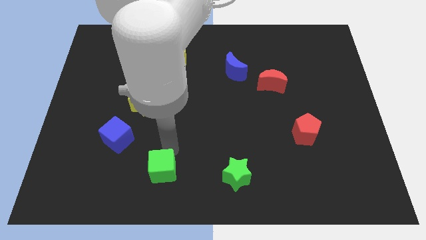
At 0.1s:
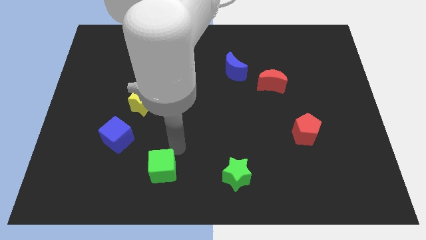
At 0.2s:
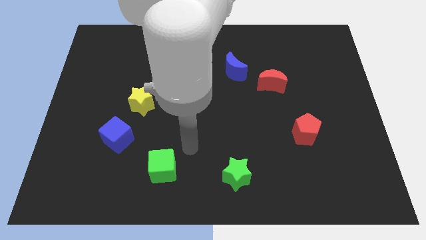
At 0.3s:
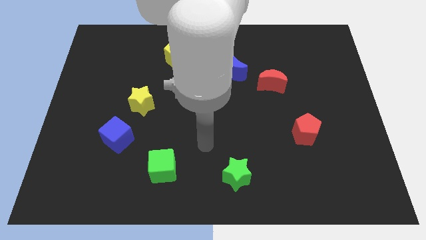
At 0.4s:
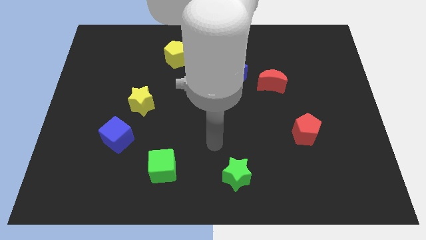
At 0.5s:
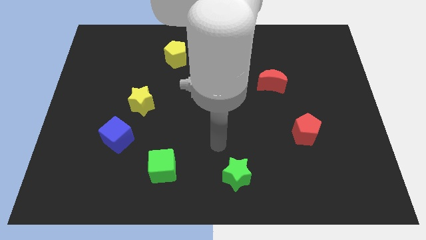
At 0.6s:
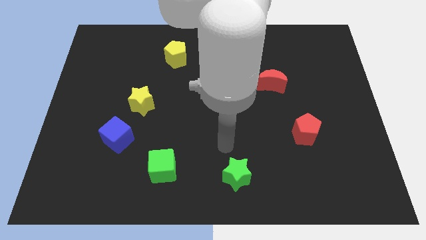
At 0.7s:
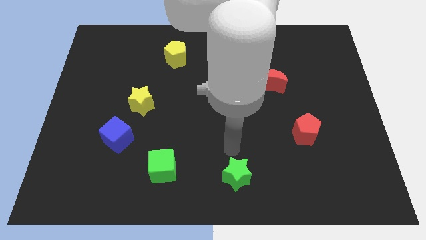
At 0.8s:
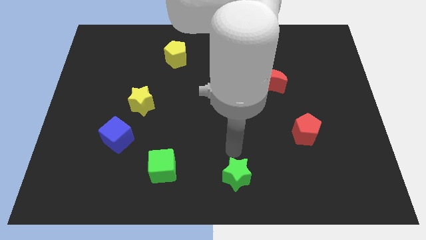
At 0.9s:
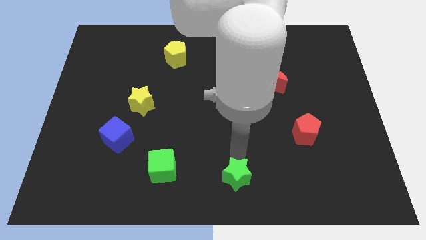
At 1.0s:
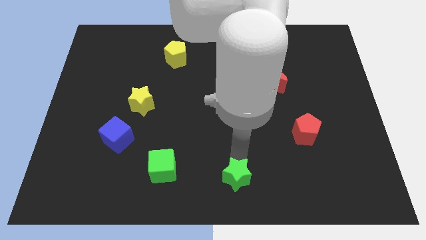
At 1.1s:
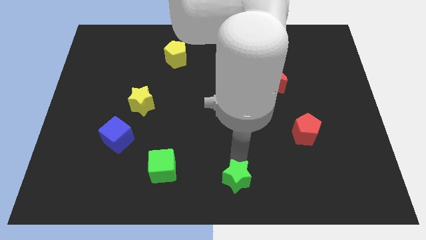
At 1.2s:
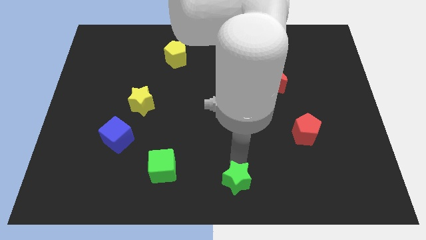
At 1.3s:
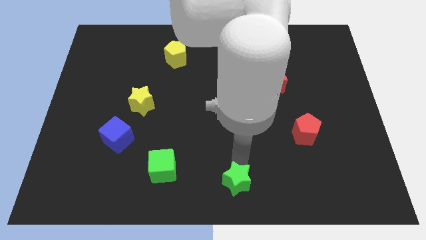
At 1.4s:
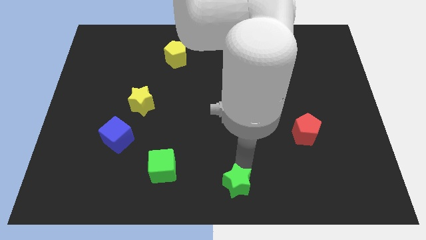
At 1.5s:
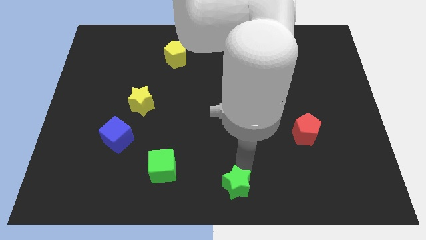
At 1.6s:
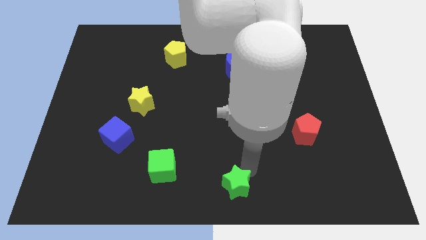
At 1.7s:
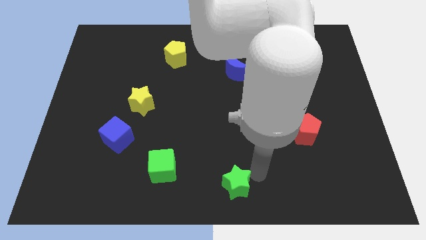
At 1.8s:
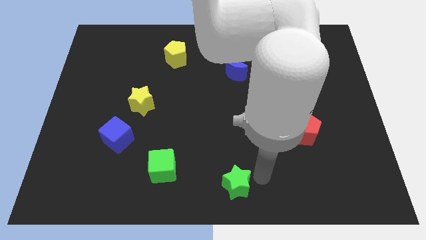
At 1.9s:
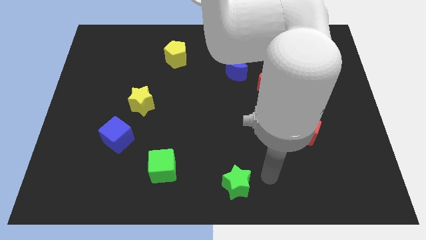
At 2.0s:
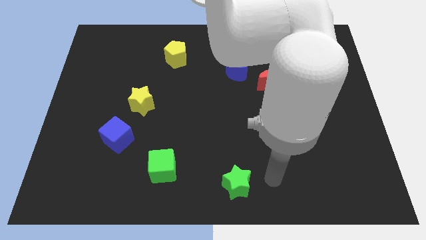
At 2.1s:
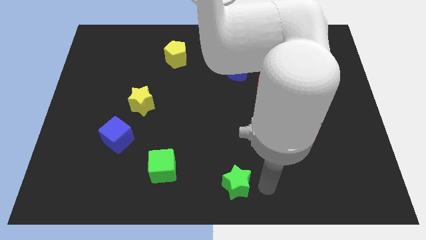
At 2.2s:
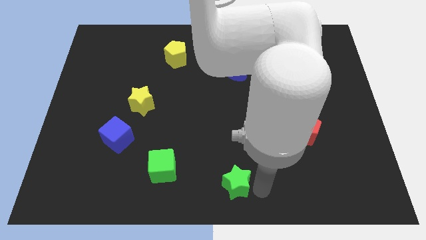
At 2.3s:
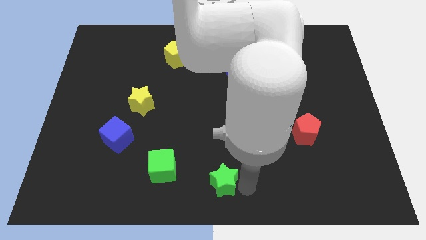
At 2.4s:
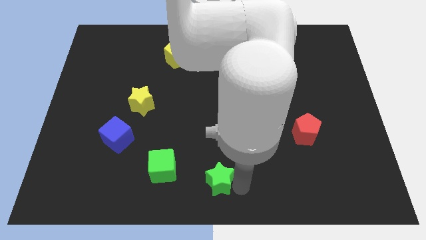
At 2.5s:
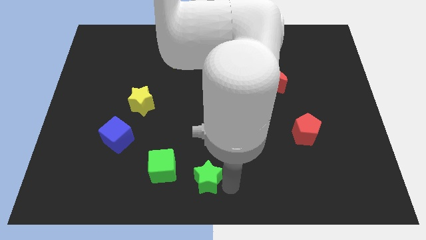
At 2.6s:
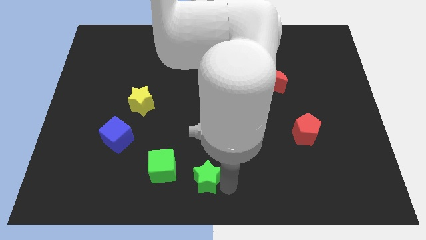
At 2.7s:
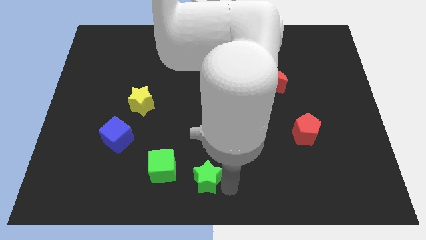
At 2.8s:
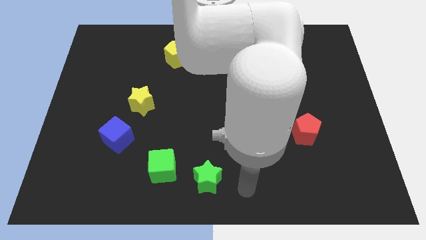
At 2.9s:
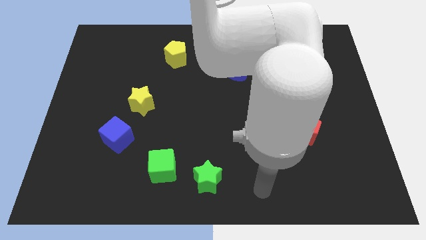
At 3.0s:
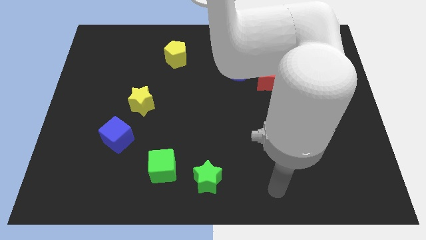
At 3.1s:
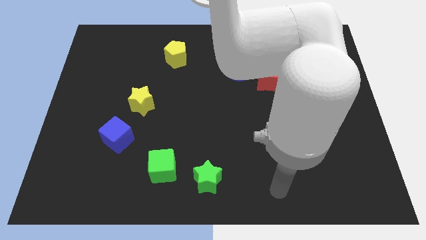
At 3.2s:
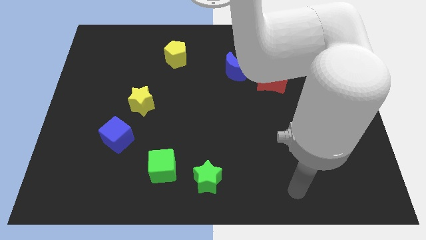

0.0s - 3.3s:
move the green star right side of the green cube

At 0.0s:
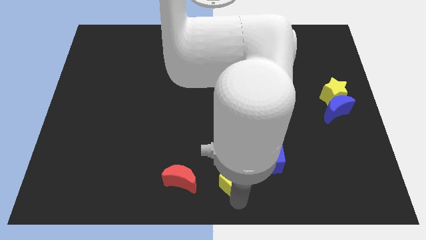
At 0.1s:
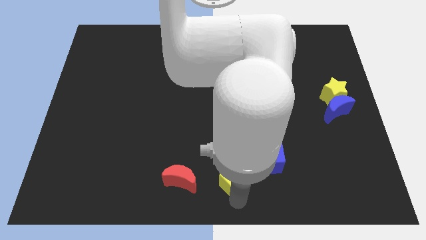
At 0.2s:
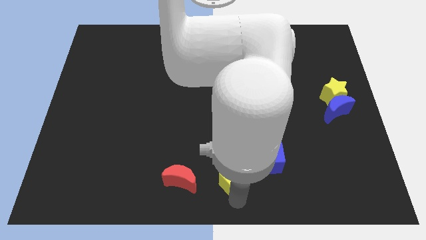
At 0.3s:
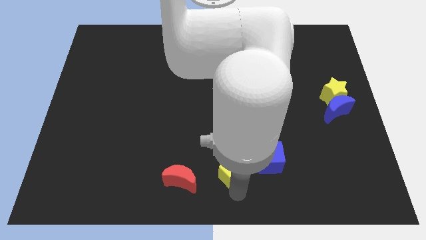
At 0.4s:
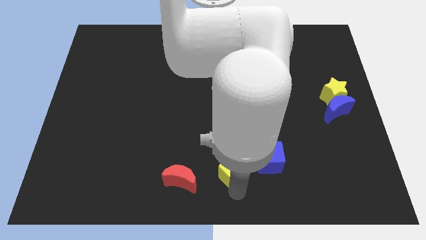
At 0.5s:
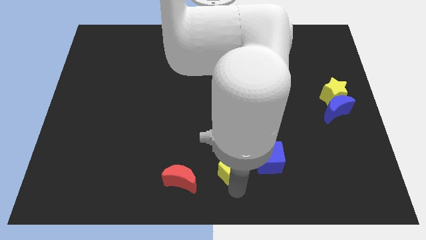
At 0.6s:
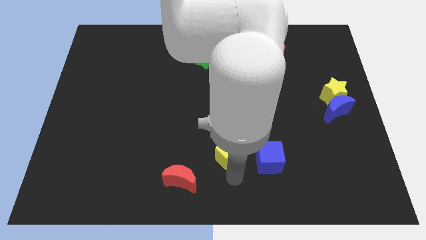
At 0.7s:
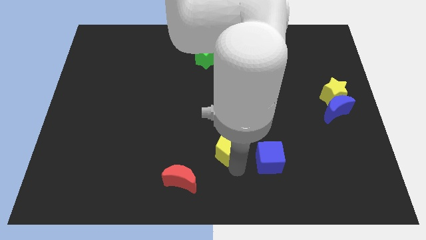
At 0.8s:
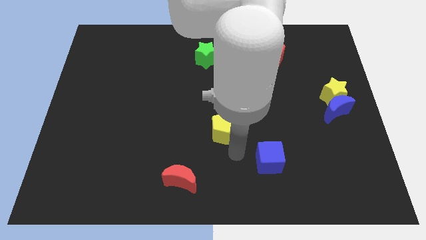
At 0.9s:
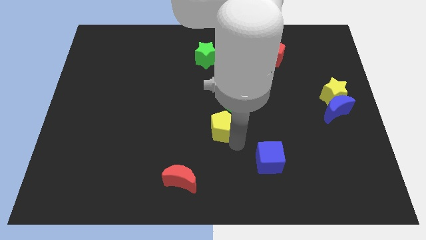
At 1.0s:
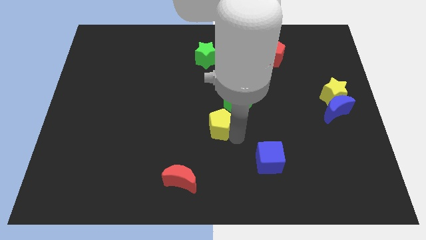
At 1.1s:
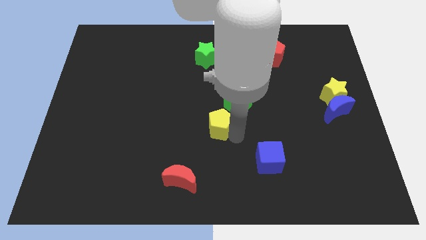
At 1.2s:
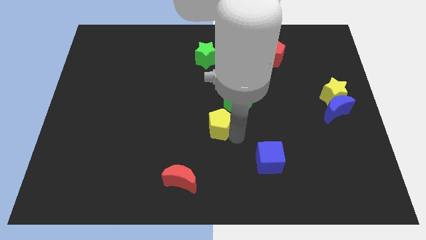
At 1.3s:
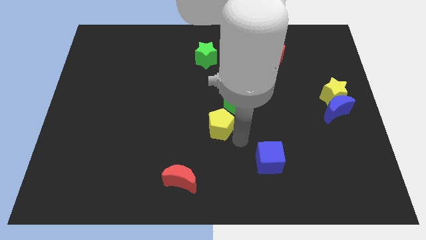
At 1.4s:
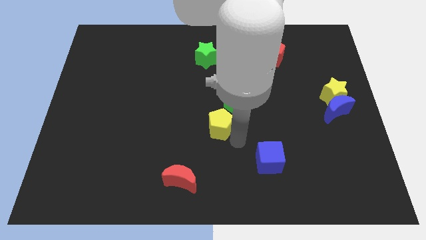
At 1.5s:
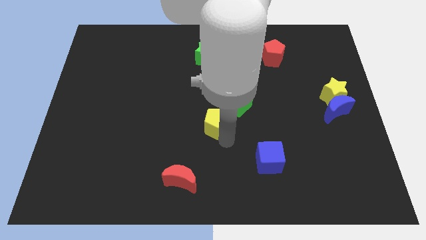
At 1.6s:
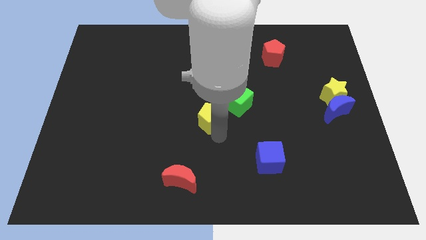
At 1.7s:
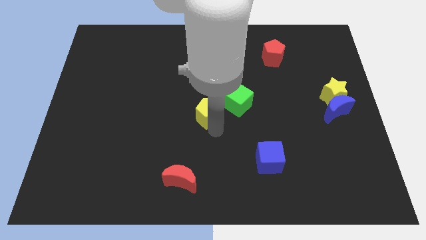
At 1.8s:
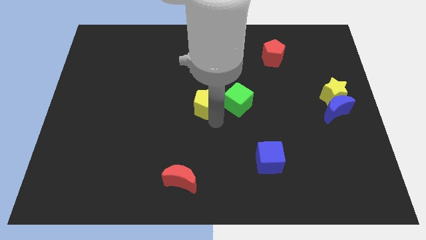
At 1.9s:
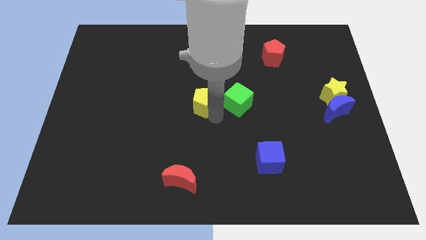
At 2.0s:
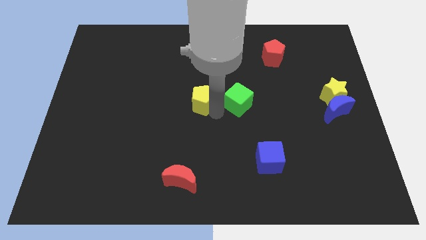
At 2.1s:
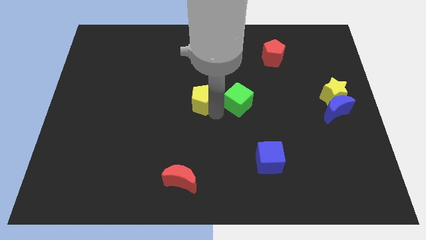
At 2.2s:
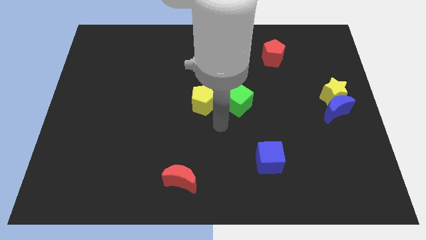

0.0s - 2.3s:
move the yellow pentagon to the left of green cube

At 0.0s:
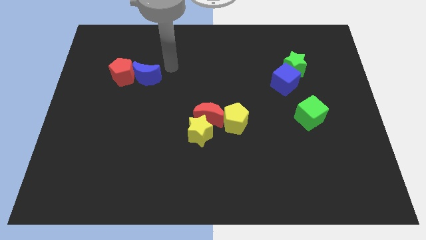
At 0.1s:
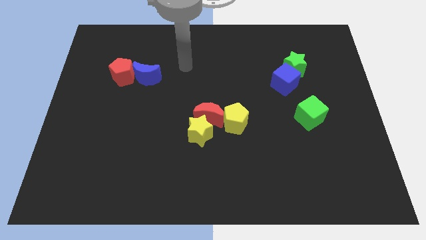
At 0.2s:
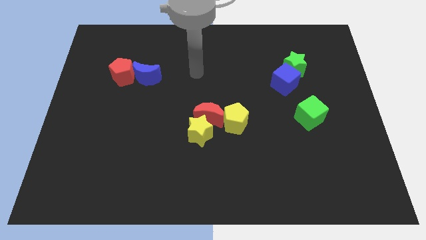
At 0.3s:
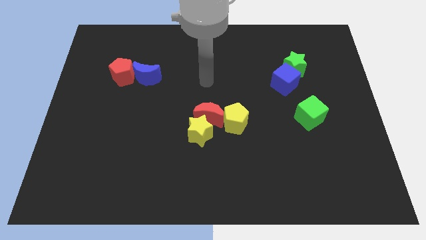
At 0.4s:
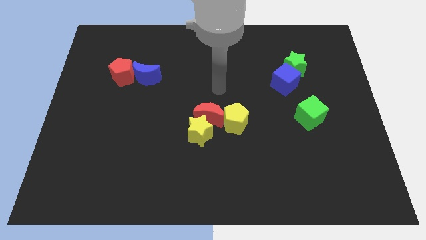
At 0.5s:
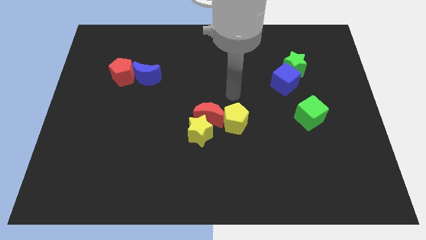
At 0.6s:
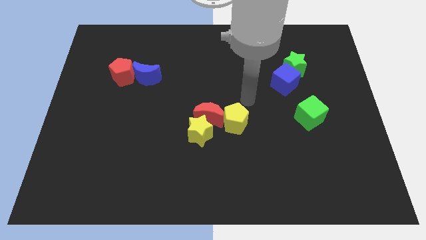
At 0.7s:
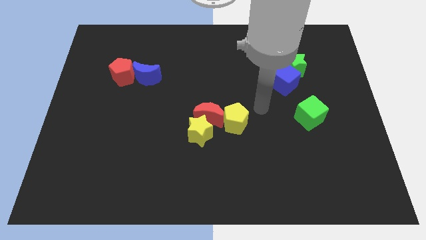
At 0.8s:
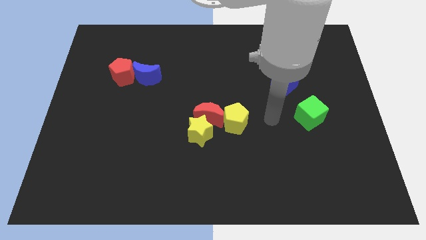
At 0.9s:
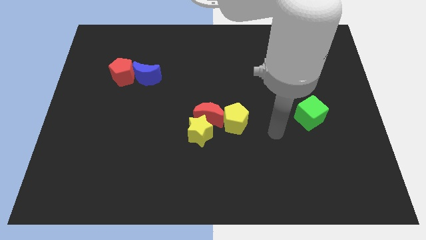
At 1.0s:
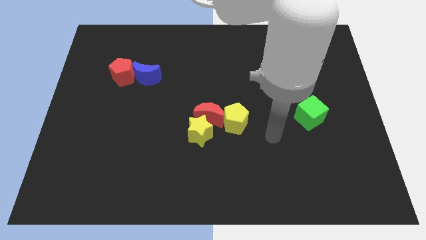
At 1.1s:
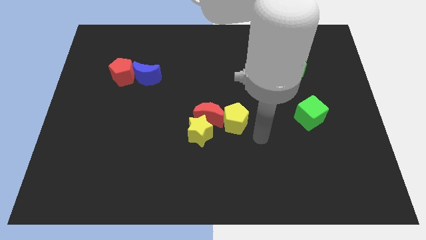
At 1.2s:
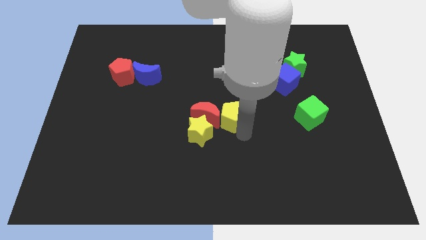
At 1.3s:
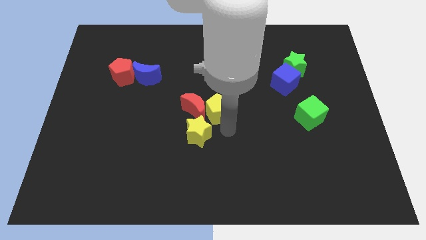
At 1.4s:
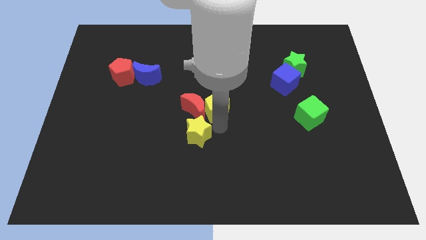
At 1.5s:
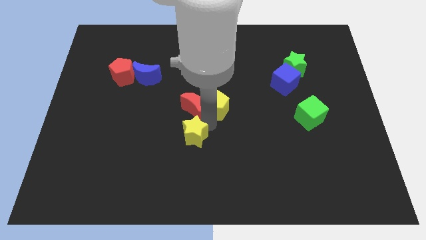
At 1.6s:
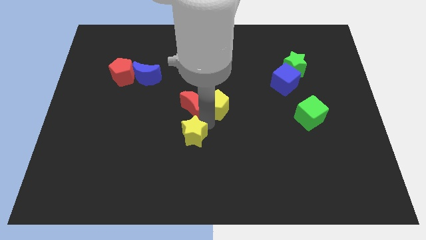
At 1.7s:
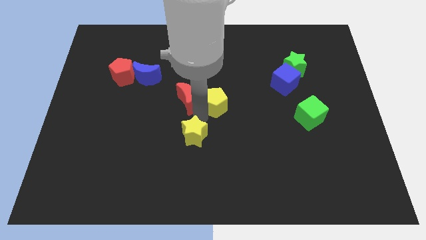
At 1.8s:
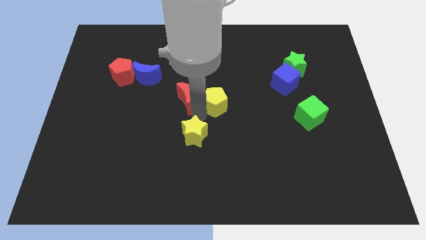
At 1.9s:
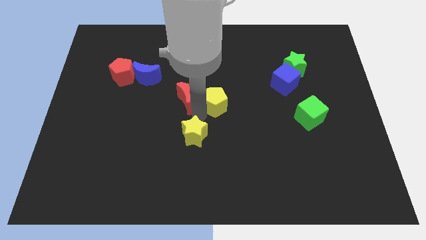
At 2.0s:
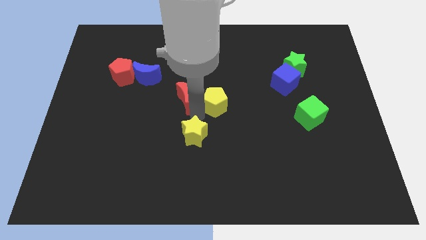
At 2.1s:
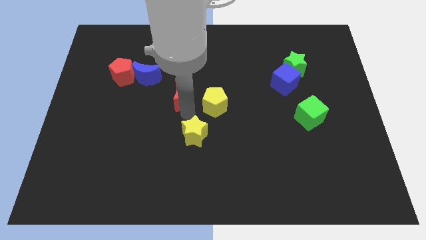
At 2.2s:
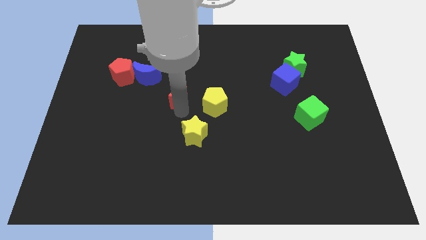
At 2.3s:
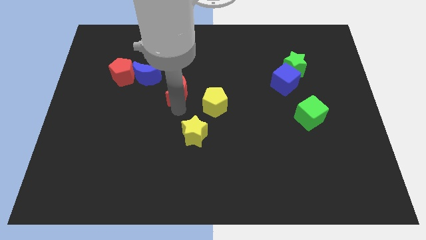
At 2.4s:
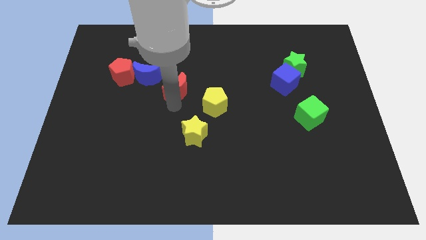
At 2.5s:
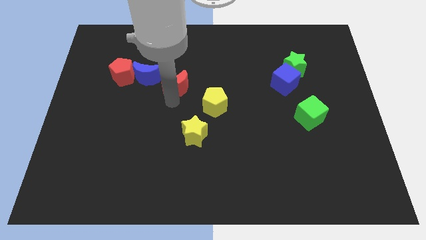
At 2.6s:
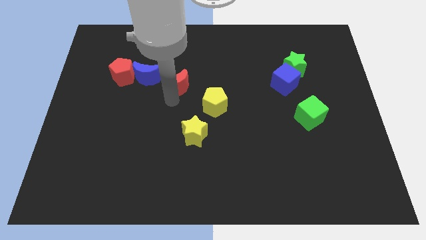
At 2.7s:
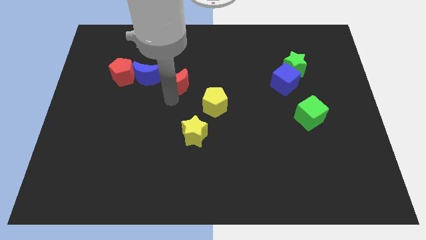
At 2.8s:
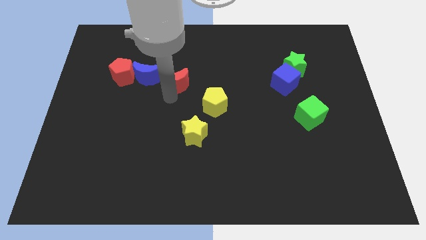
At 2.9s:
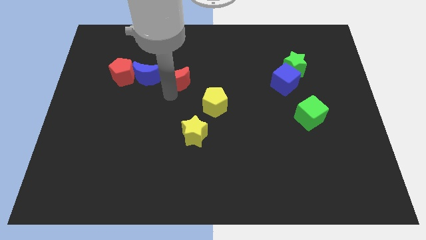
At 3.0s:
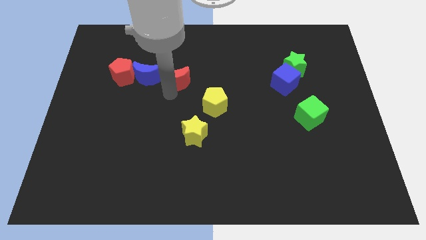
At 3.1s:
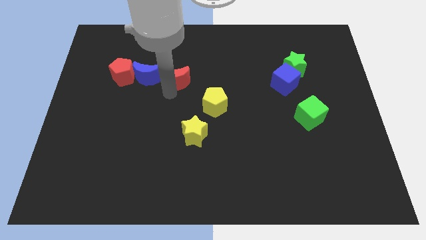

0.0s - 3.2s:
separate the red moon from the yellow blocks
